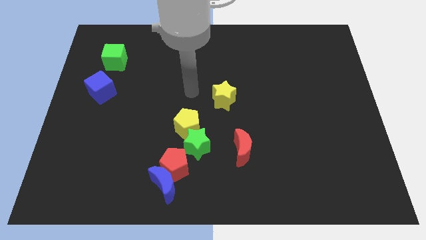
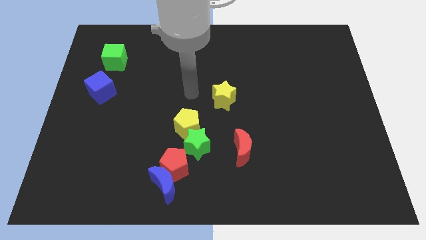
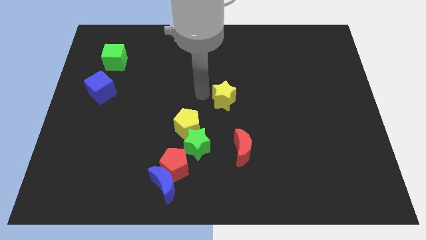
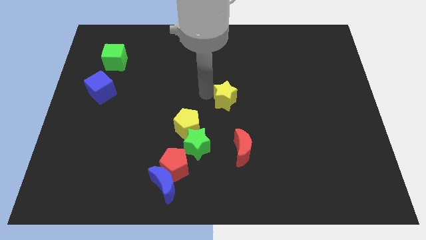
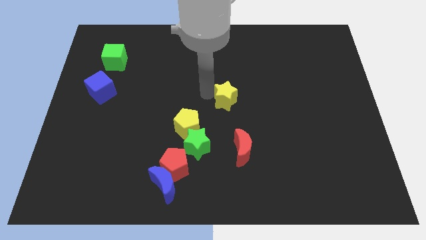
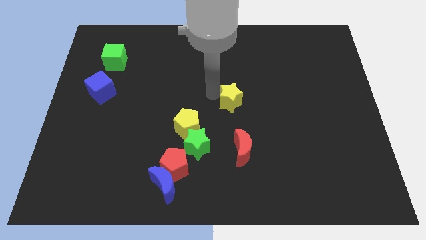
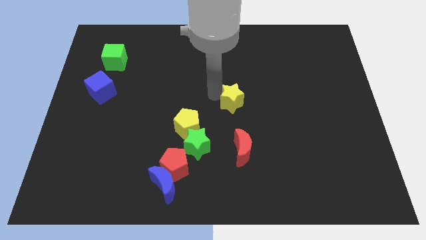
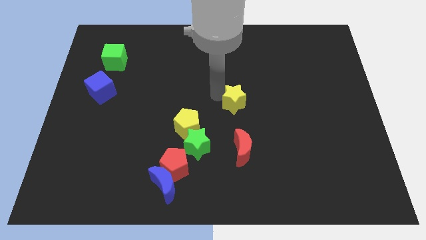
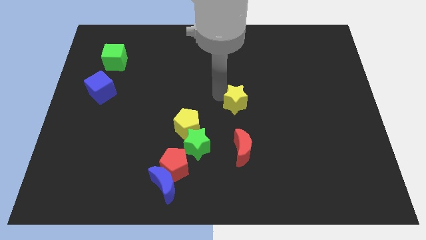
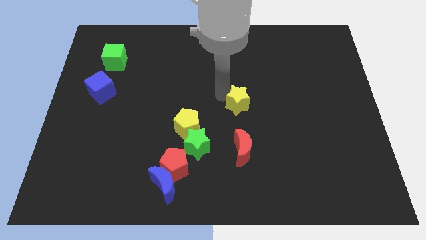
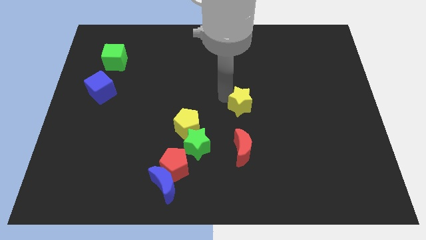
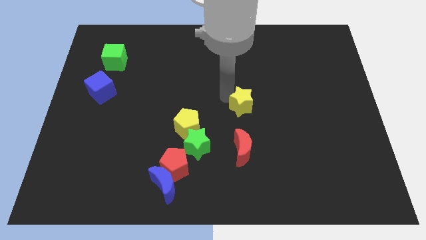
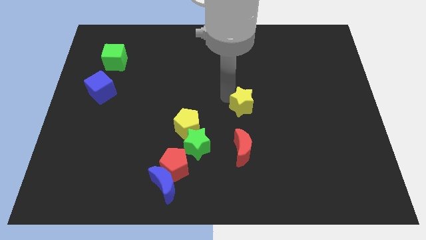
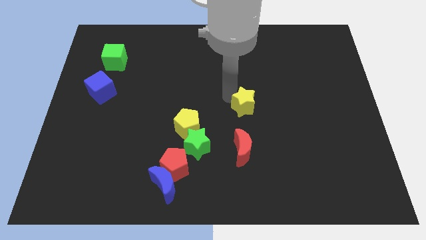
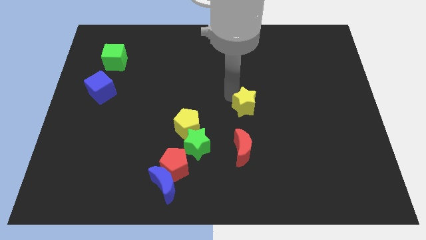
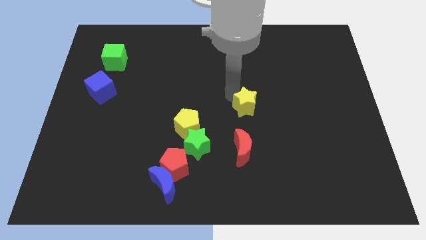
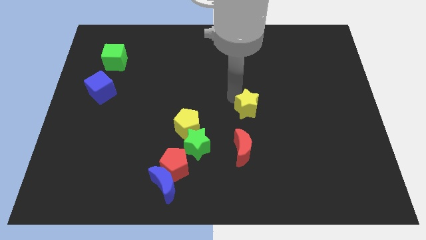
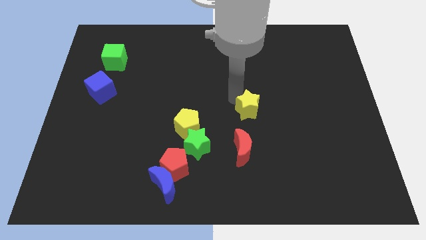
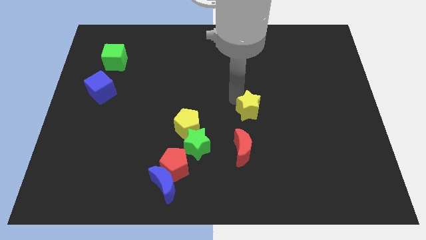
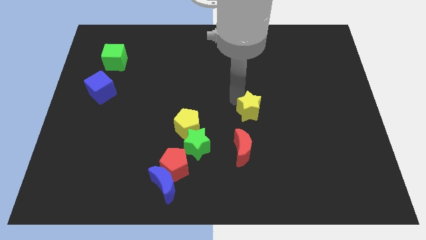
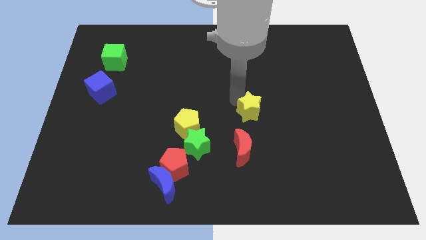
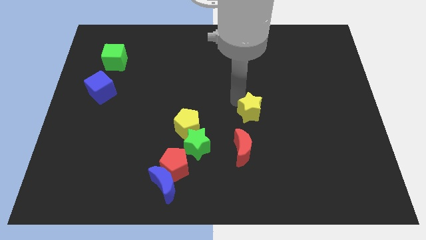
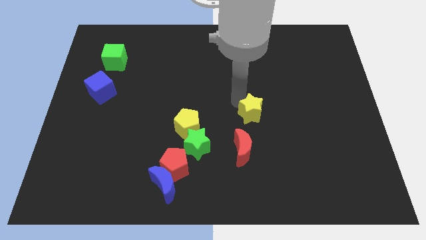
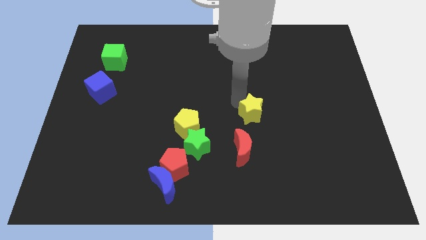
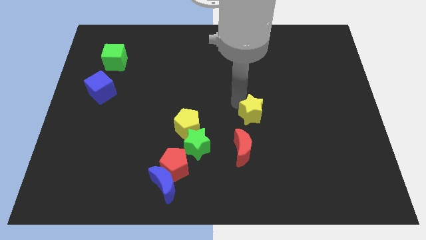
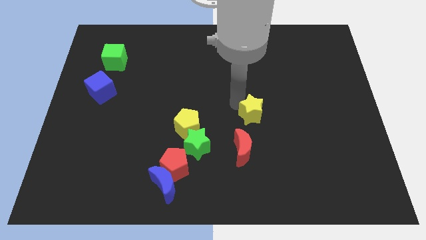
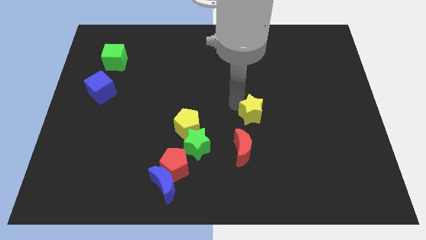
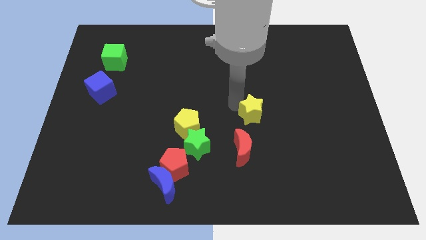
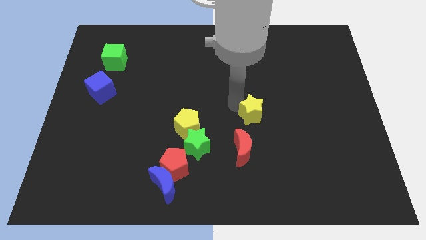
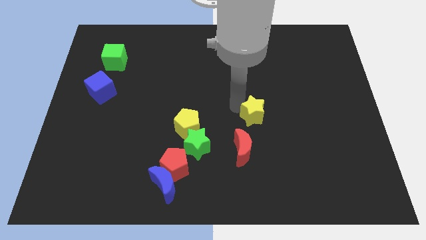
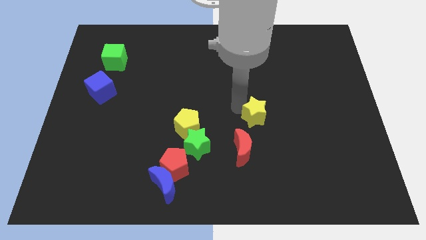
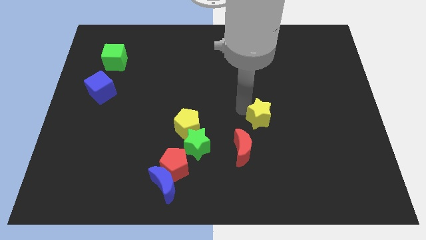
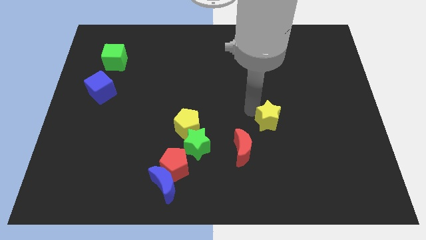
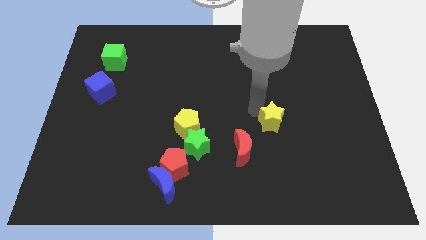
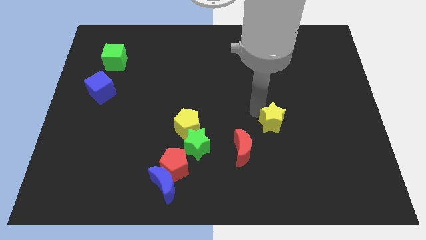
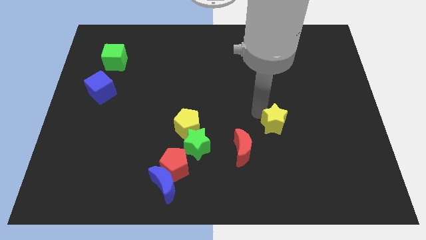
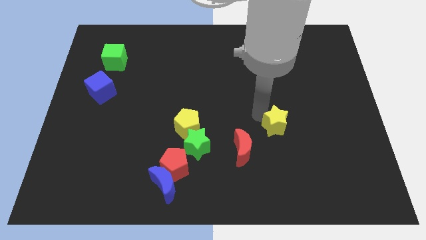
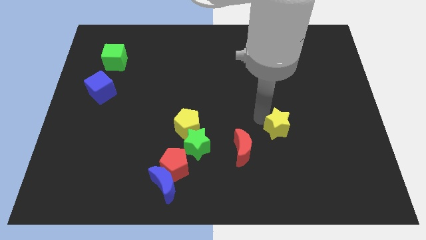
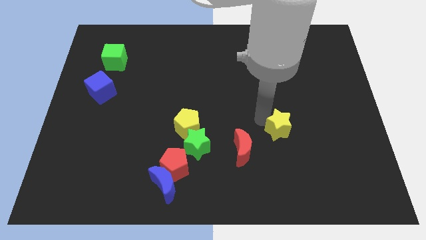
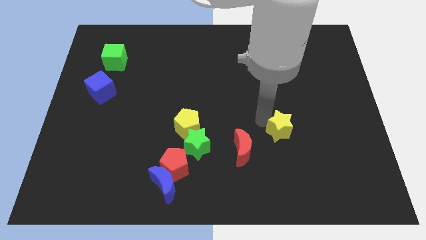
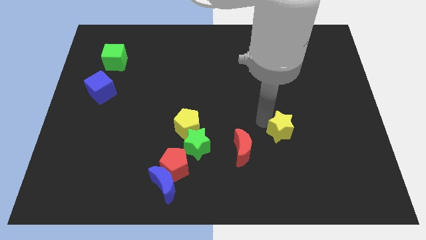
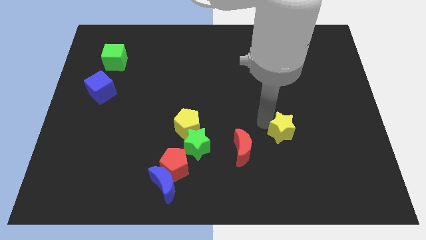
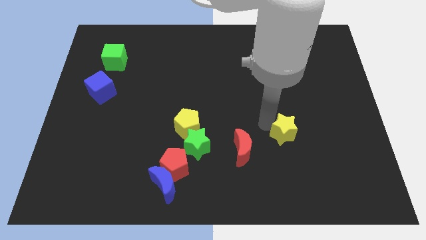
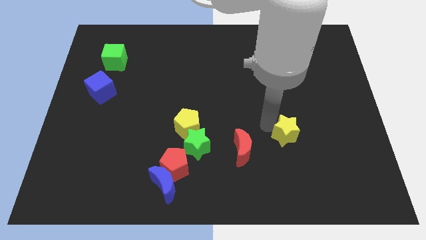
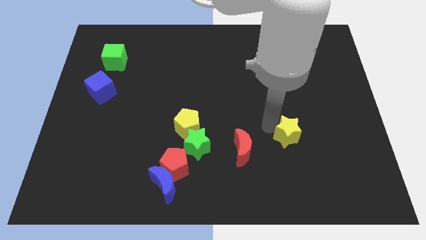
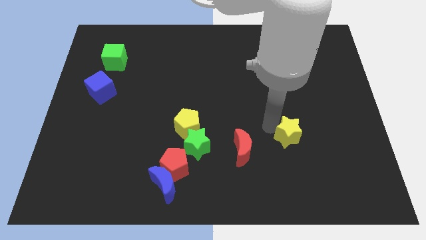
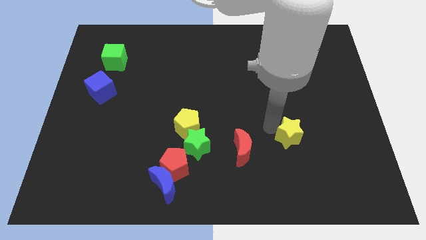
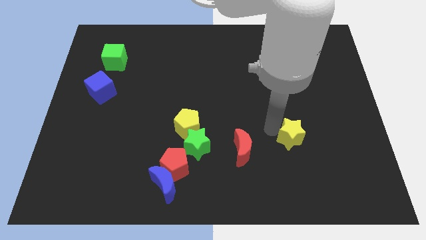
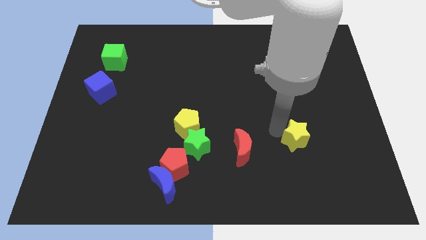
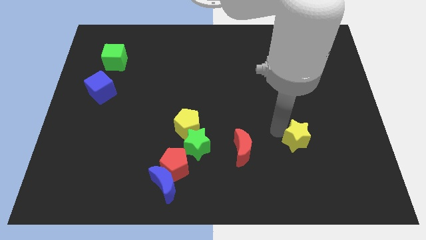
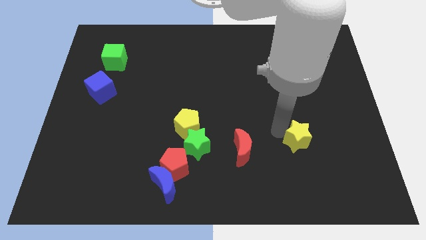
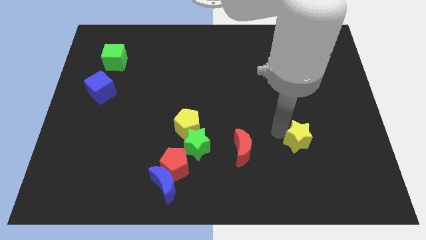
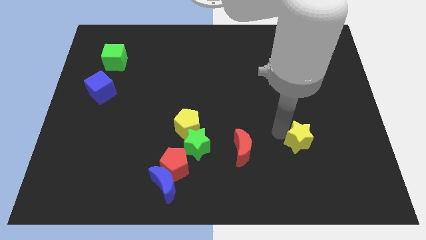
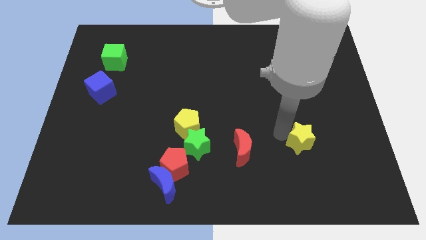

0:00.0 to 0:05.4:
place yellow star to the right of red moon

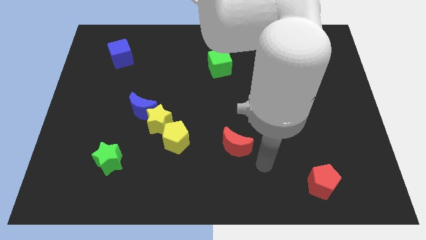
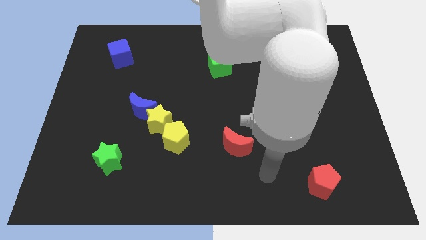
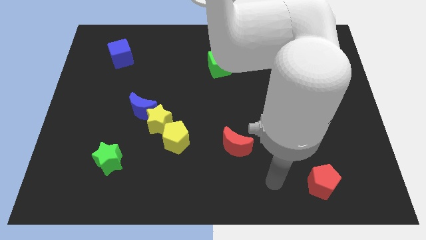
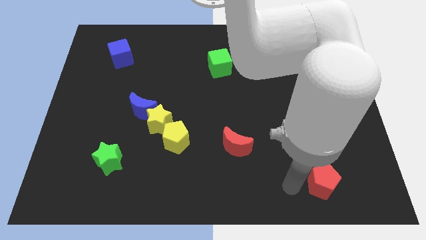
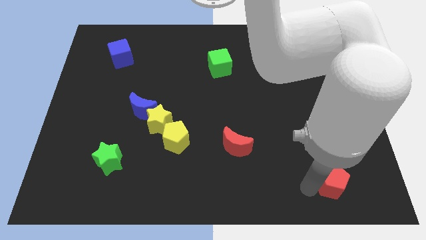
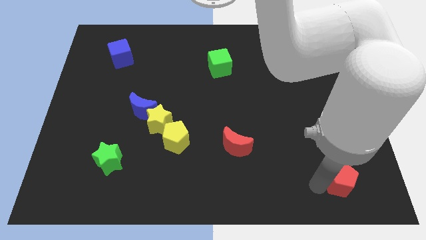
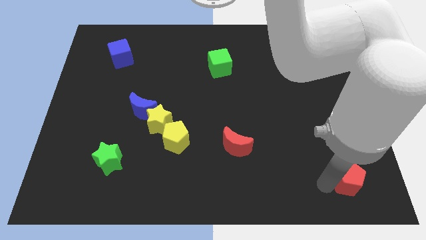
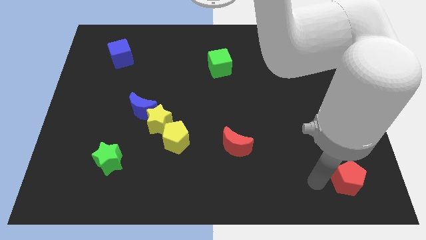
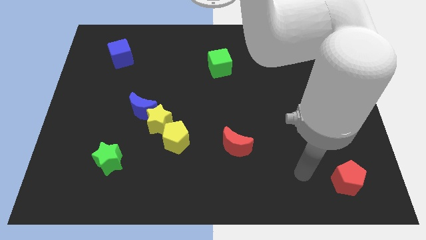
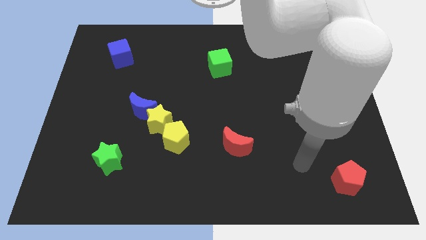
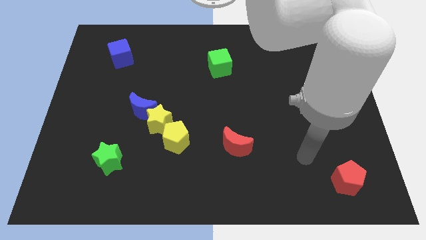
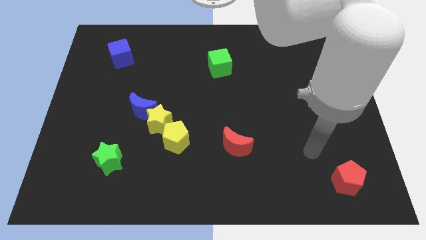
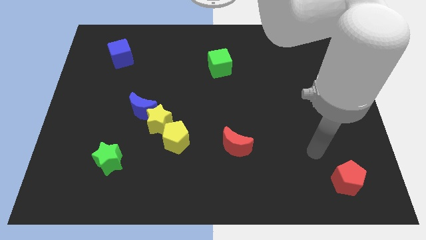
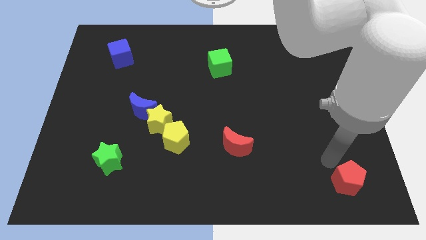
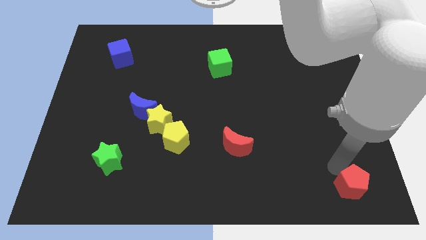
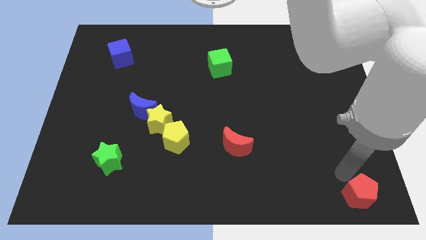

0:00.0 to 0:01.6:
slightly move the red crescent towards the bottom center of the board

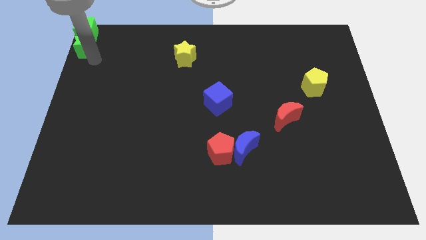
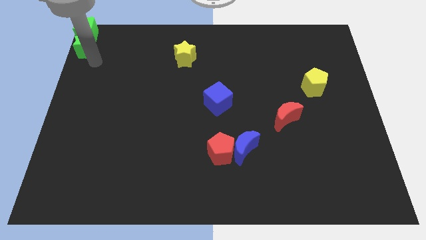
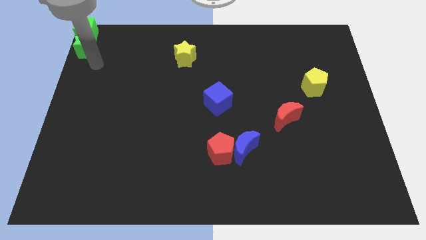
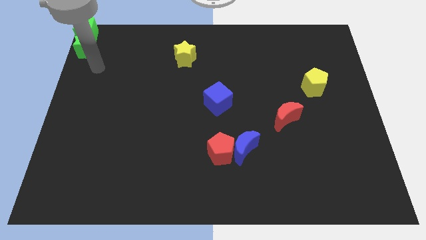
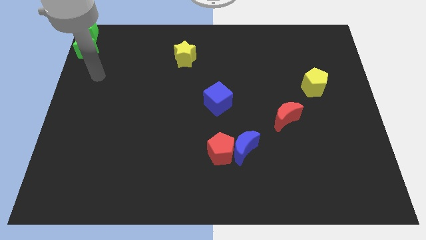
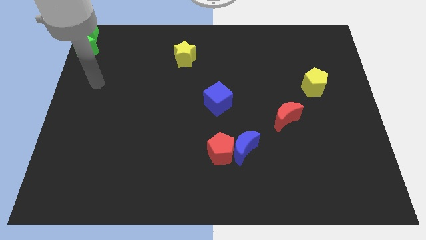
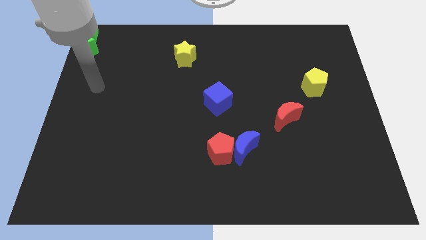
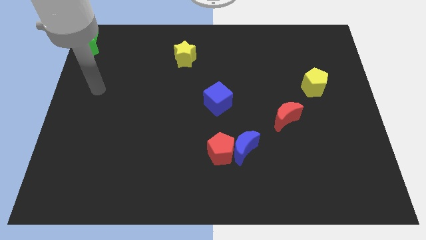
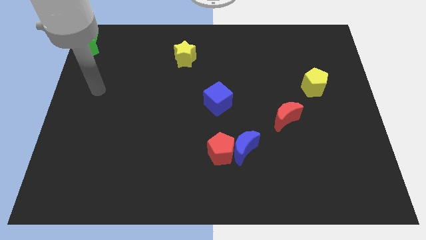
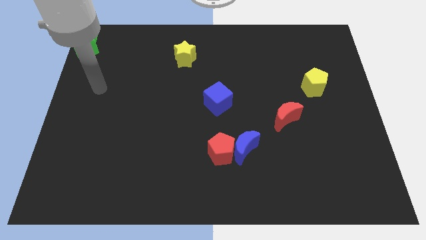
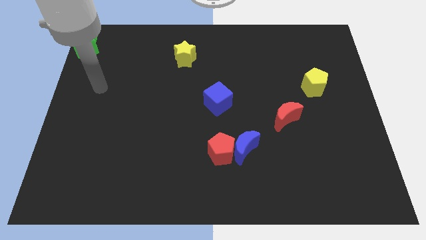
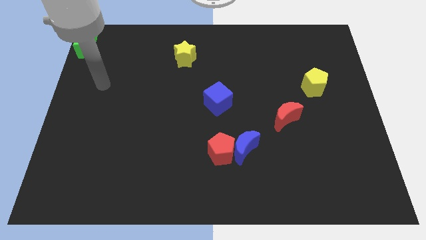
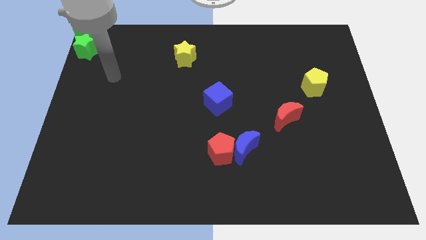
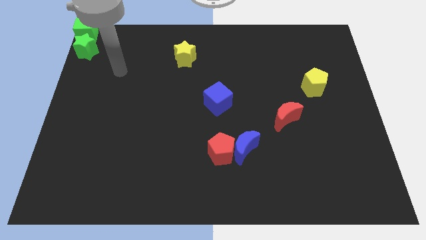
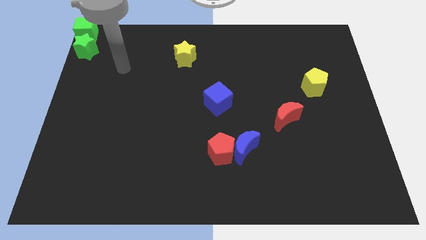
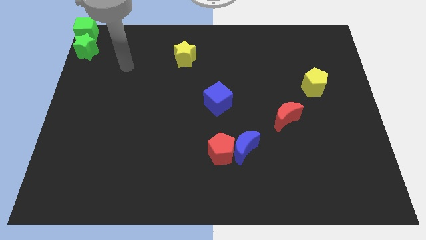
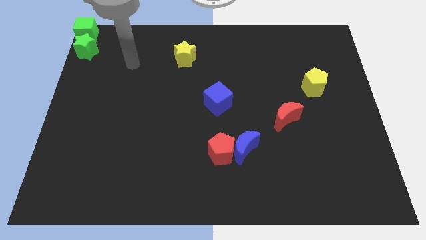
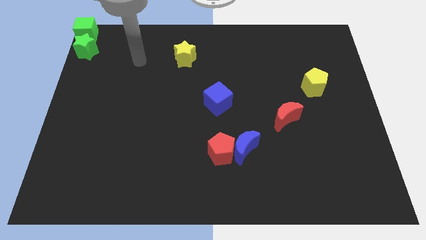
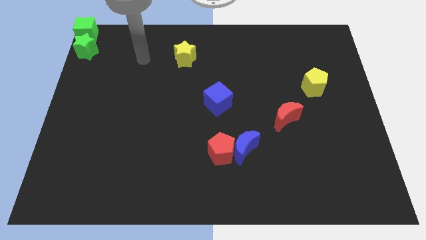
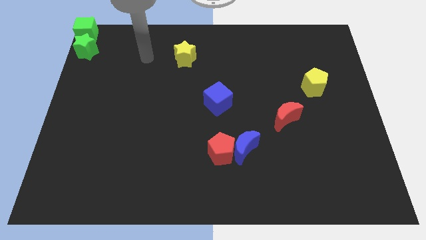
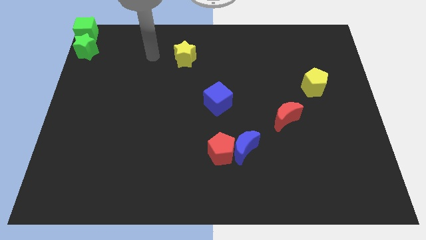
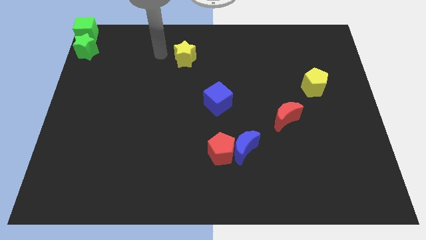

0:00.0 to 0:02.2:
move your arm away from the green star
